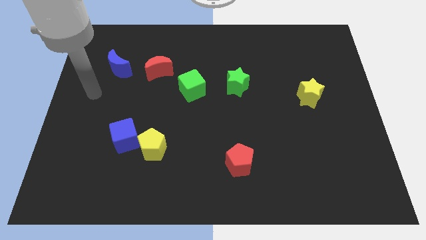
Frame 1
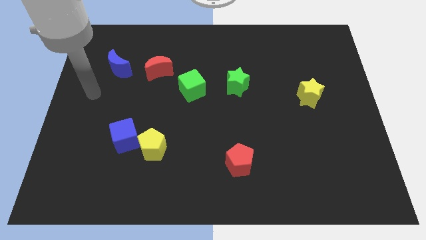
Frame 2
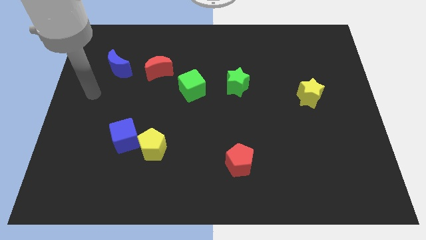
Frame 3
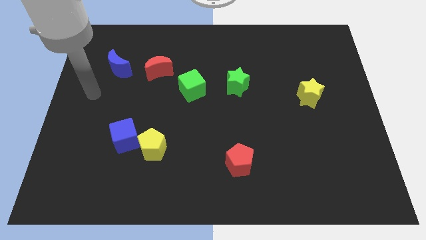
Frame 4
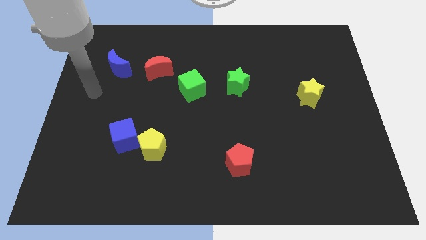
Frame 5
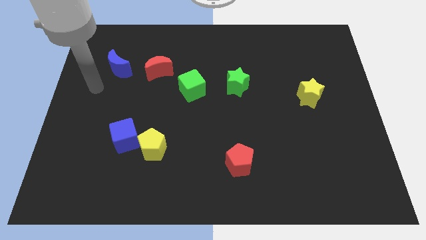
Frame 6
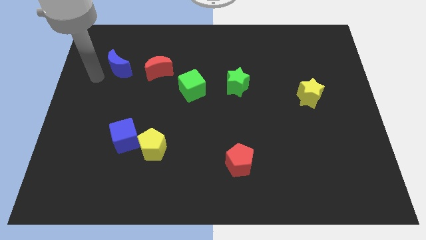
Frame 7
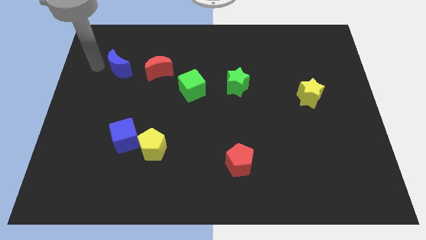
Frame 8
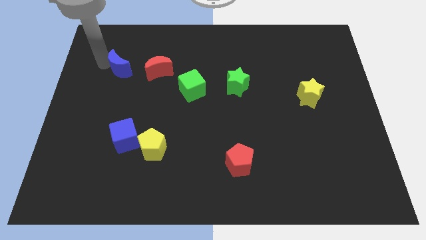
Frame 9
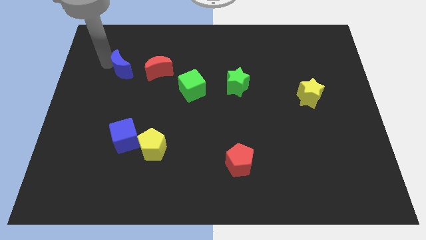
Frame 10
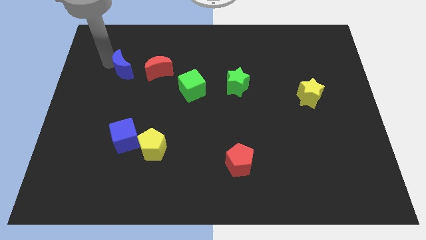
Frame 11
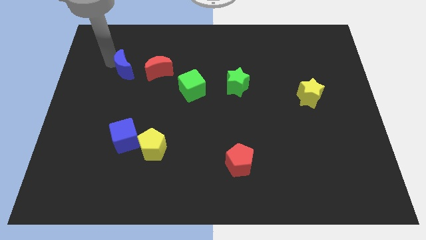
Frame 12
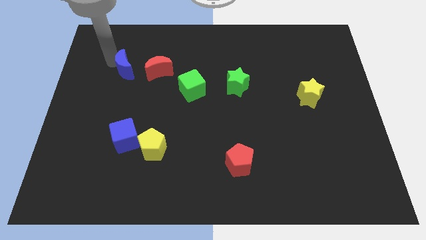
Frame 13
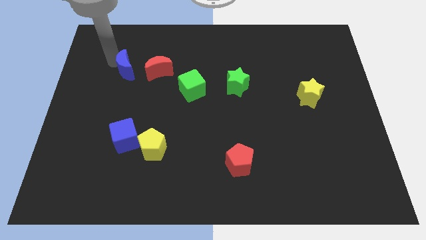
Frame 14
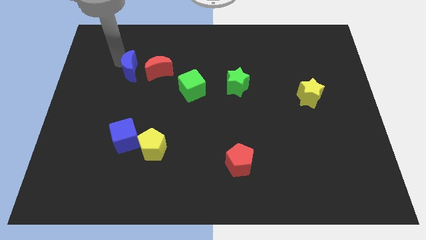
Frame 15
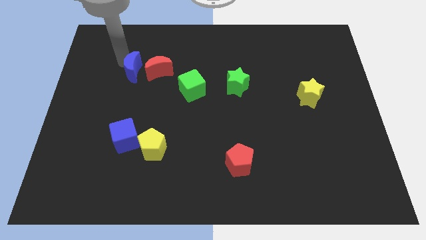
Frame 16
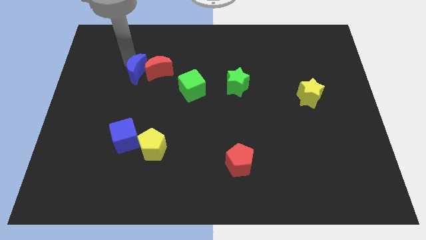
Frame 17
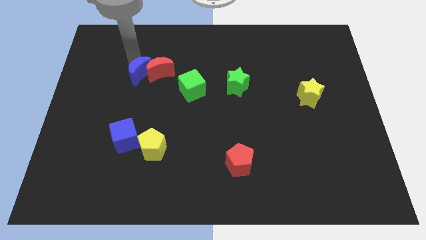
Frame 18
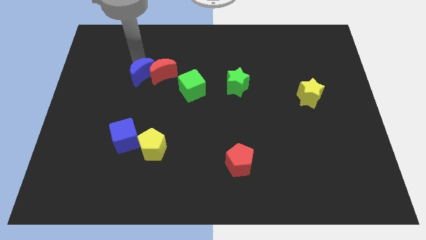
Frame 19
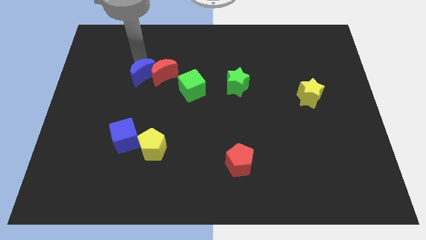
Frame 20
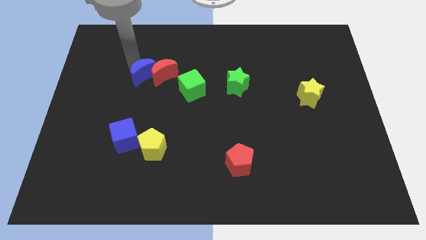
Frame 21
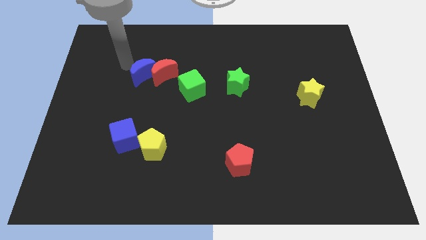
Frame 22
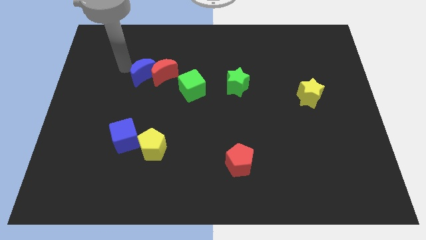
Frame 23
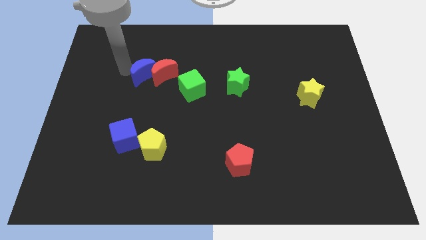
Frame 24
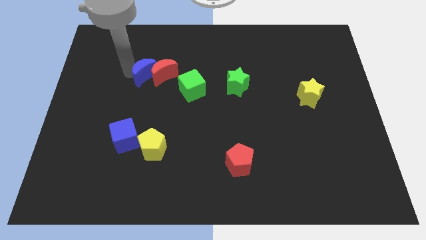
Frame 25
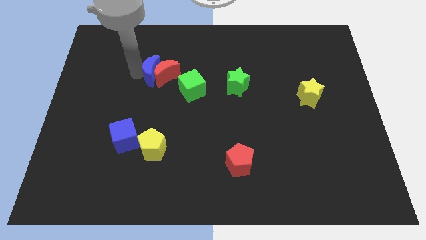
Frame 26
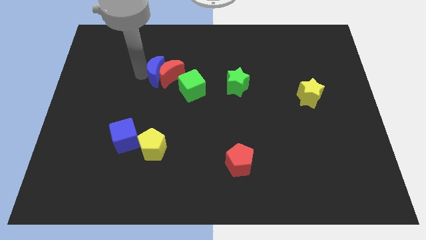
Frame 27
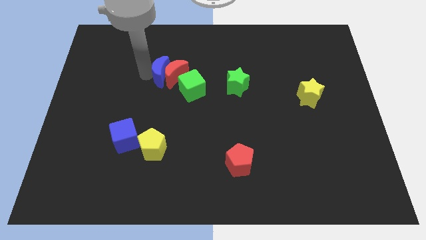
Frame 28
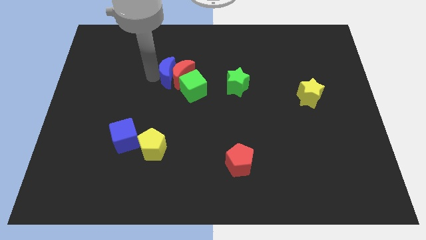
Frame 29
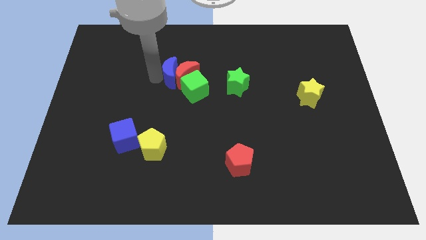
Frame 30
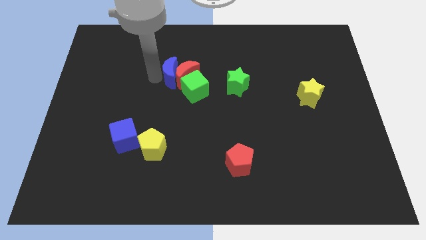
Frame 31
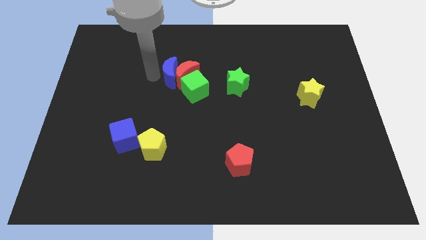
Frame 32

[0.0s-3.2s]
push the blue moon along with the red moon into the green cube

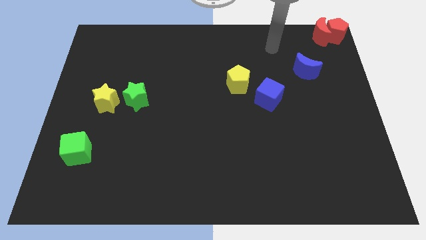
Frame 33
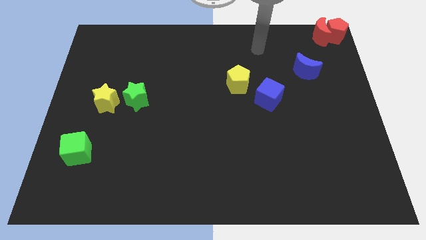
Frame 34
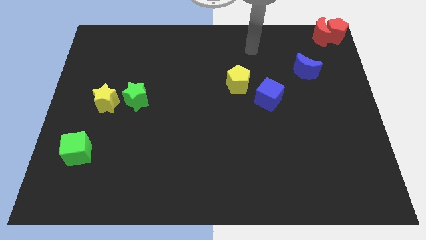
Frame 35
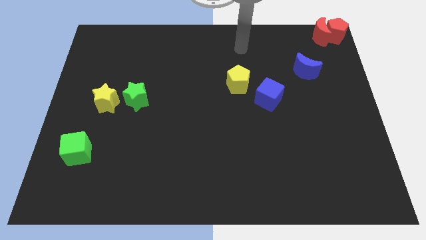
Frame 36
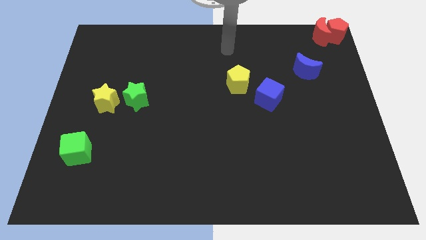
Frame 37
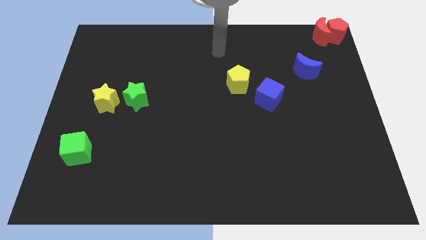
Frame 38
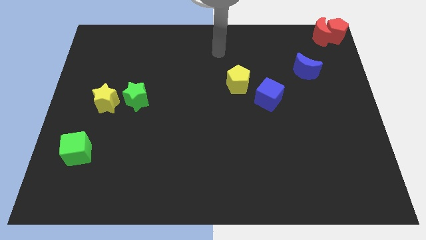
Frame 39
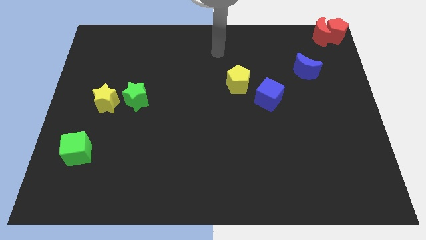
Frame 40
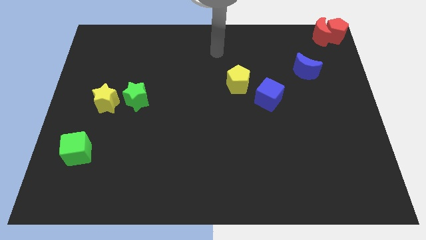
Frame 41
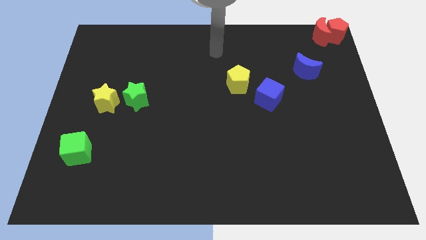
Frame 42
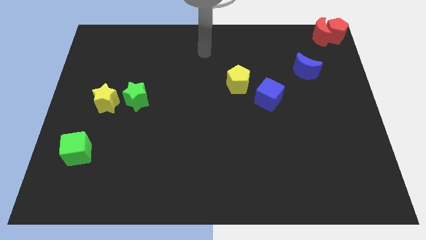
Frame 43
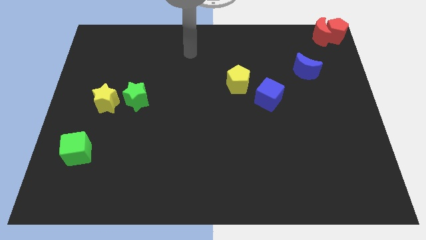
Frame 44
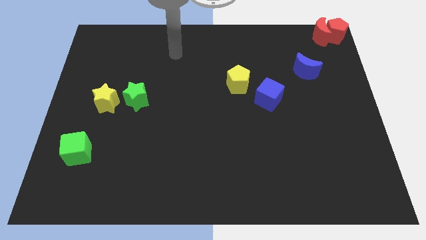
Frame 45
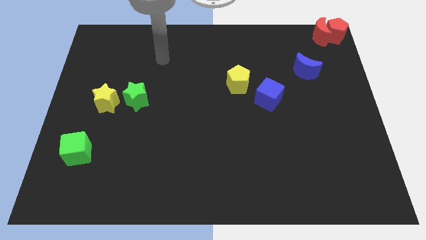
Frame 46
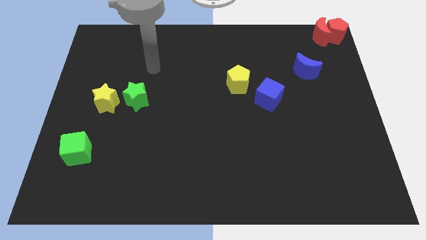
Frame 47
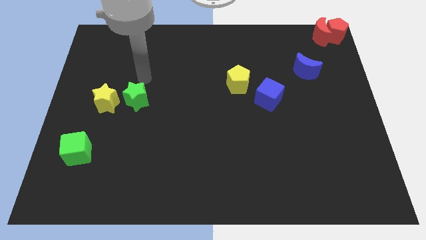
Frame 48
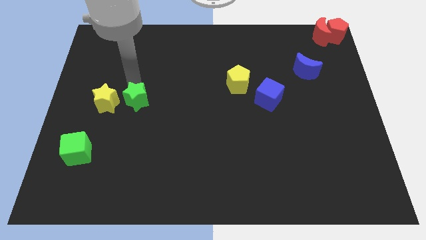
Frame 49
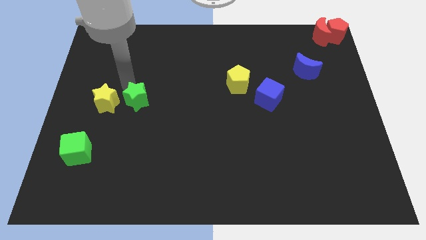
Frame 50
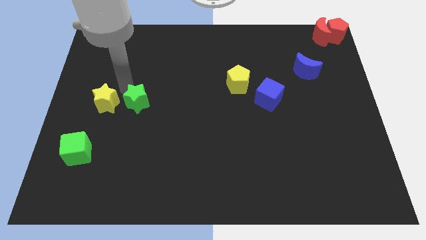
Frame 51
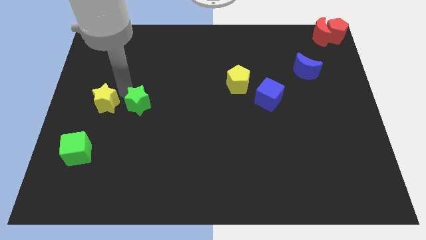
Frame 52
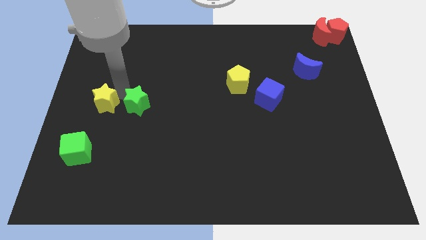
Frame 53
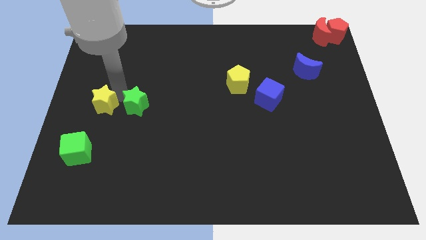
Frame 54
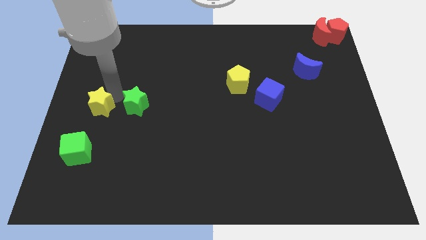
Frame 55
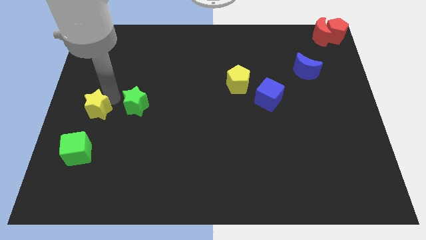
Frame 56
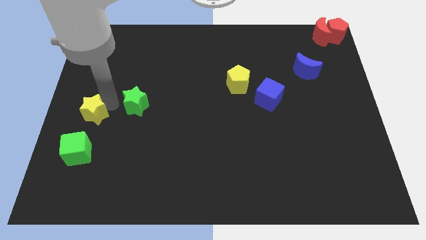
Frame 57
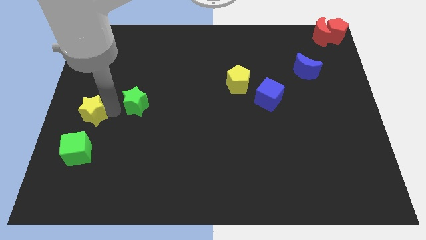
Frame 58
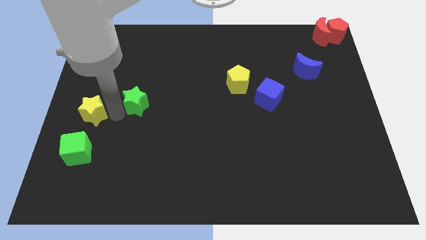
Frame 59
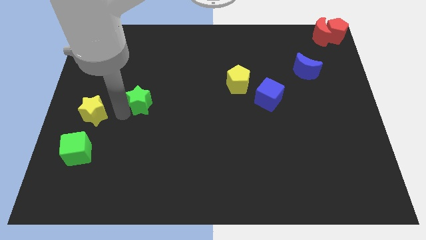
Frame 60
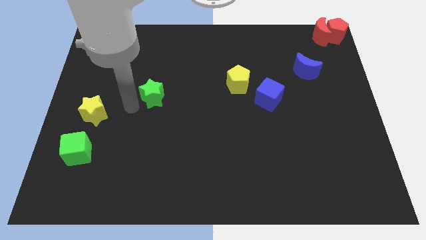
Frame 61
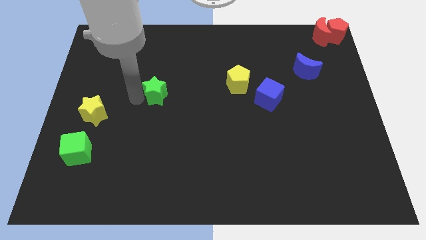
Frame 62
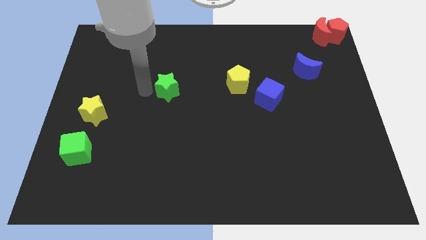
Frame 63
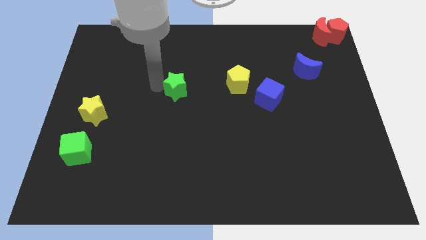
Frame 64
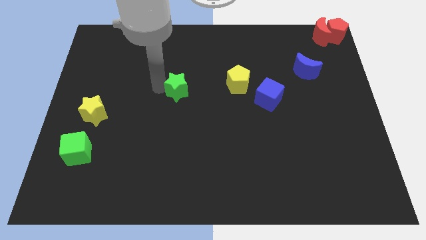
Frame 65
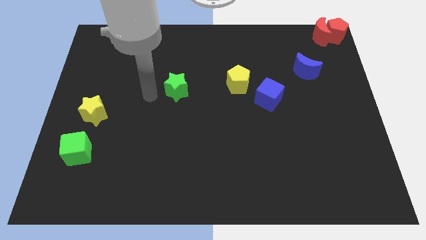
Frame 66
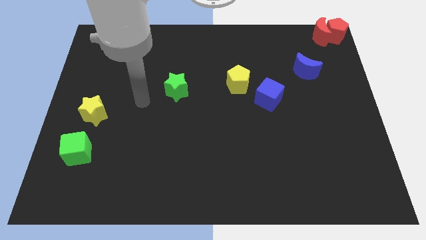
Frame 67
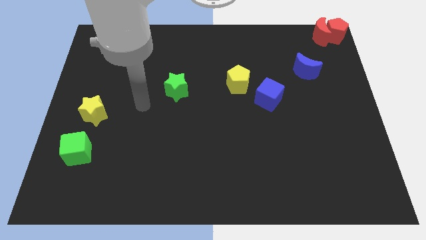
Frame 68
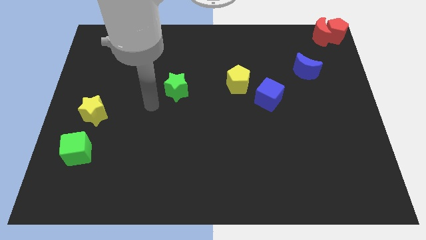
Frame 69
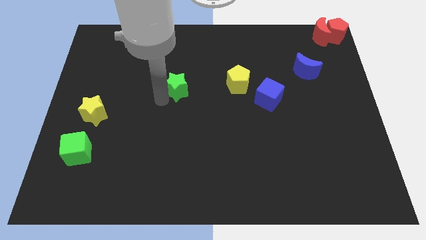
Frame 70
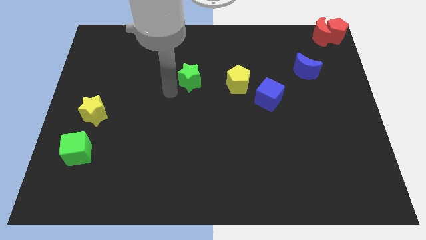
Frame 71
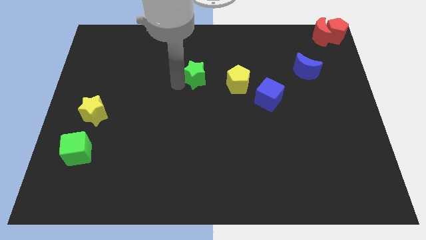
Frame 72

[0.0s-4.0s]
move green star towards yellow pentagon

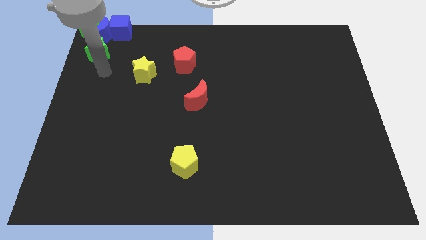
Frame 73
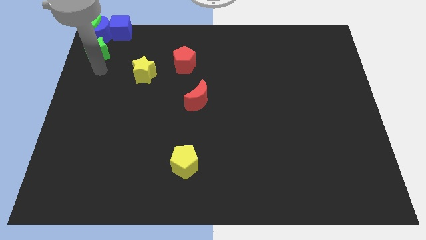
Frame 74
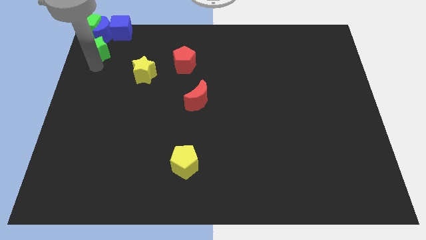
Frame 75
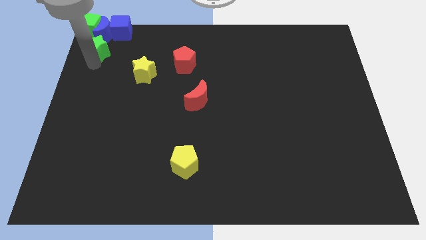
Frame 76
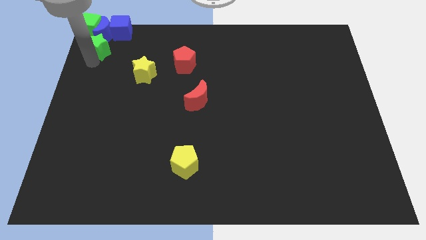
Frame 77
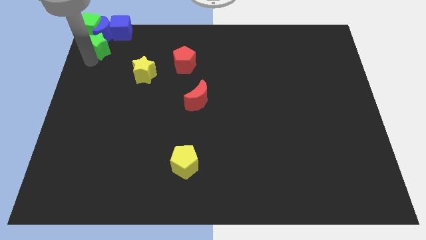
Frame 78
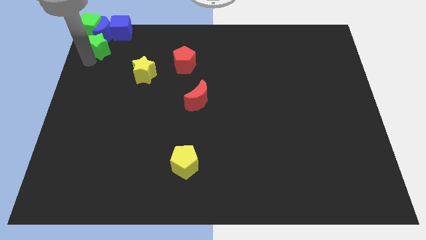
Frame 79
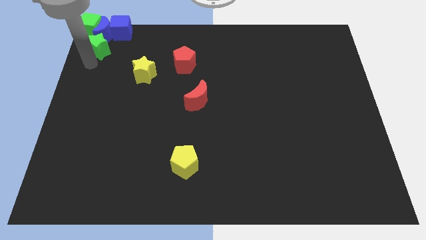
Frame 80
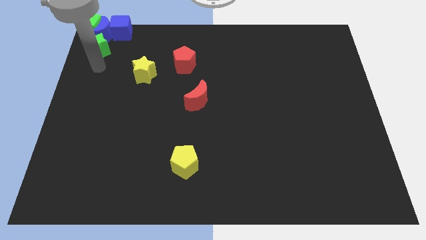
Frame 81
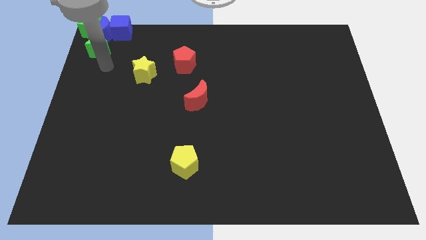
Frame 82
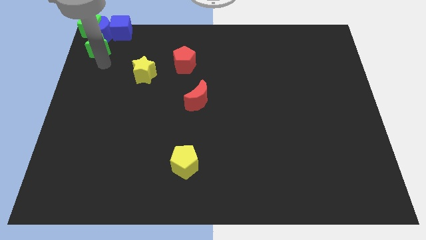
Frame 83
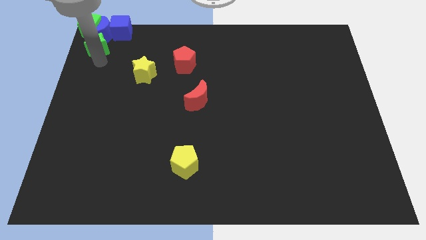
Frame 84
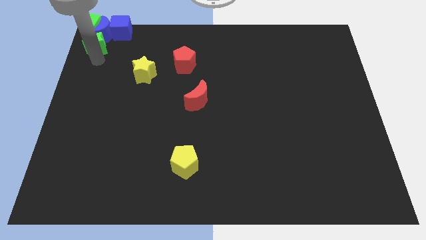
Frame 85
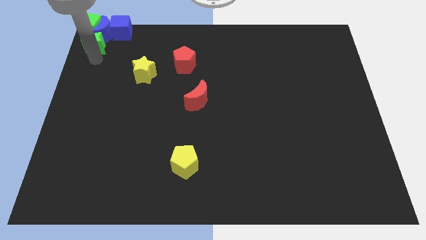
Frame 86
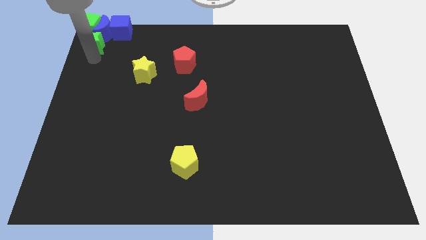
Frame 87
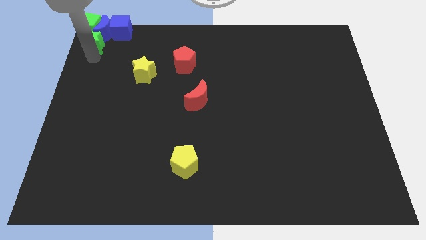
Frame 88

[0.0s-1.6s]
push the green star to the top left corner of the board
